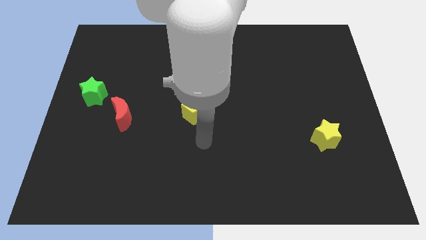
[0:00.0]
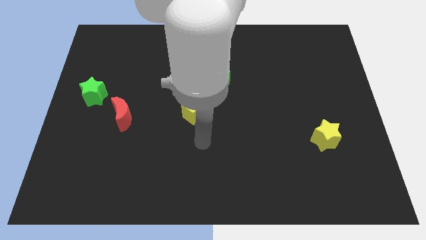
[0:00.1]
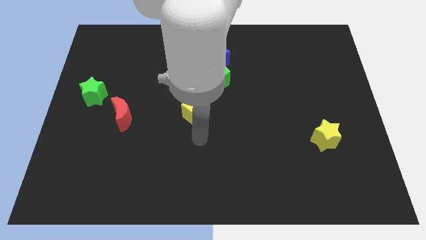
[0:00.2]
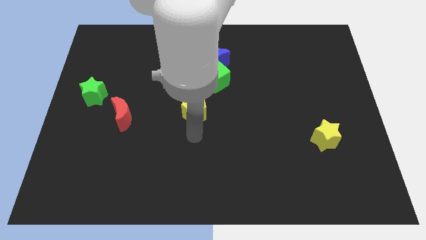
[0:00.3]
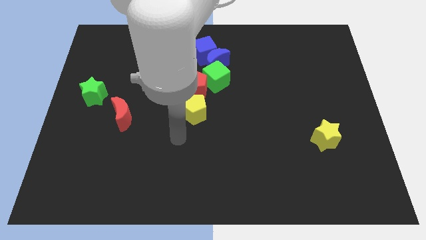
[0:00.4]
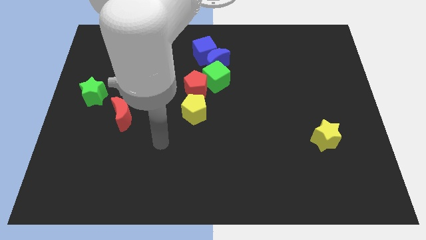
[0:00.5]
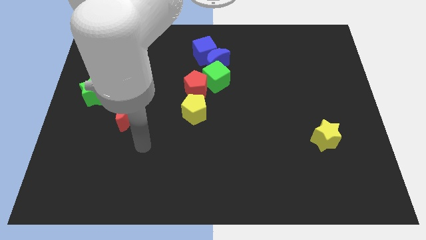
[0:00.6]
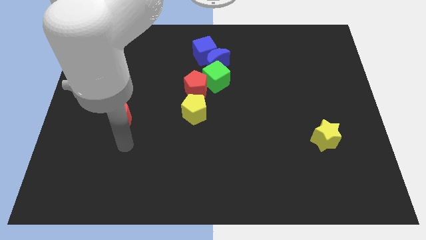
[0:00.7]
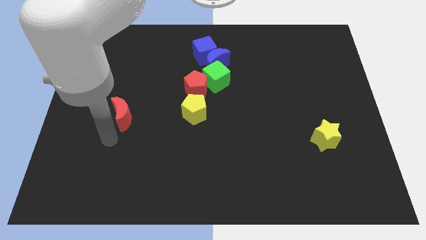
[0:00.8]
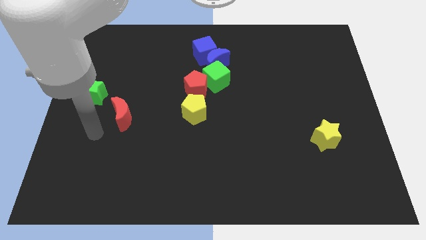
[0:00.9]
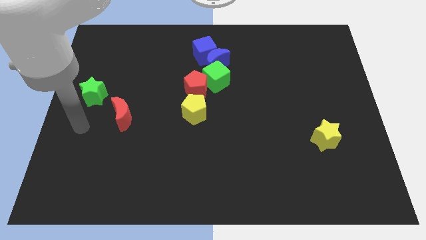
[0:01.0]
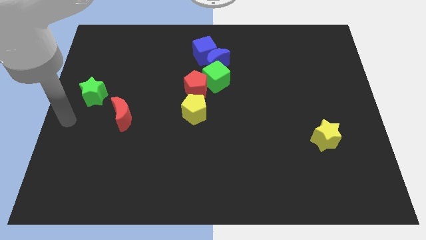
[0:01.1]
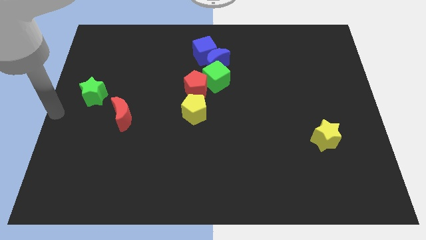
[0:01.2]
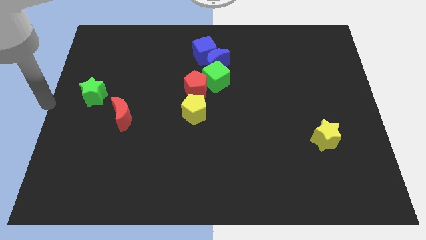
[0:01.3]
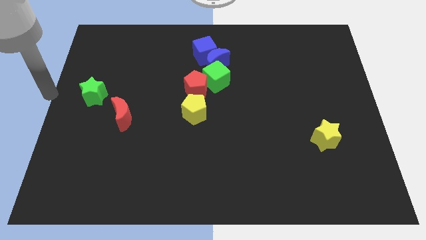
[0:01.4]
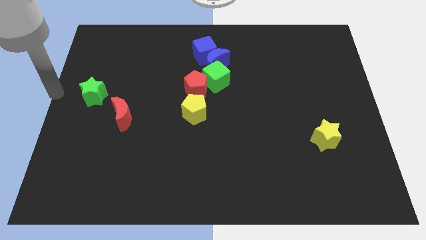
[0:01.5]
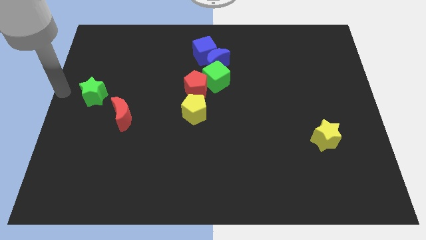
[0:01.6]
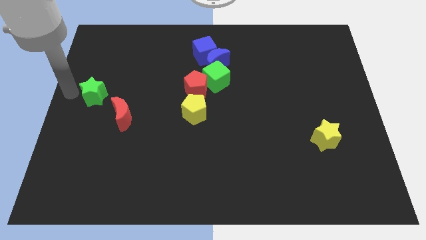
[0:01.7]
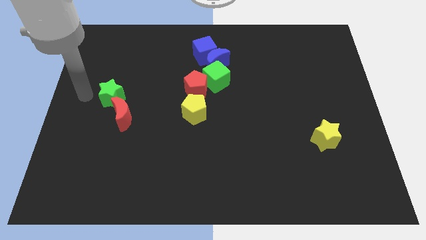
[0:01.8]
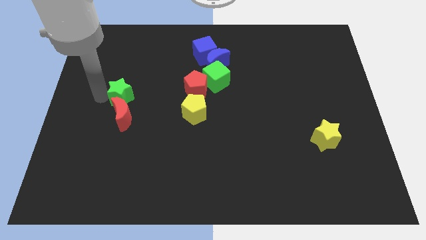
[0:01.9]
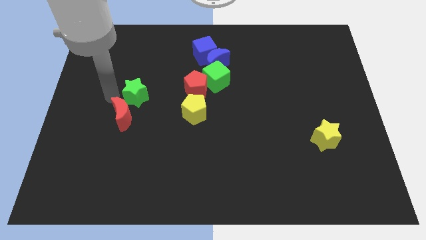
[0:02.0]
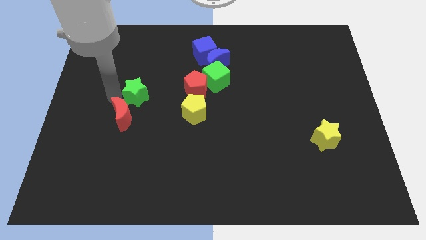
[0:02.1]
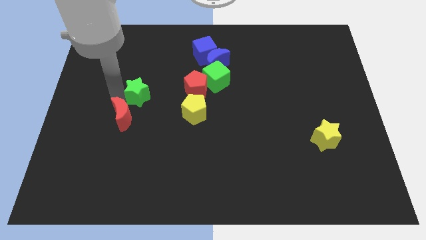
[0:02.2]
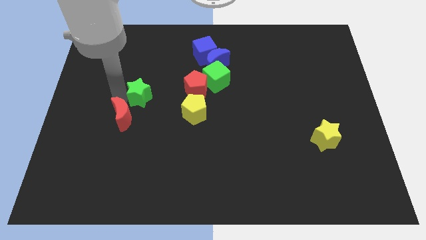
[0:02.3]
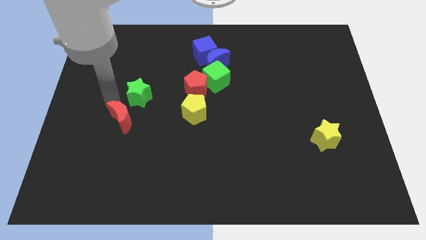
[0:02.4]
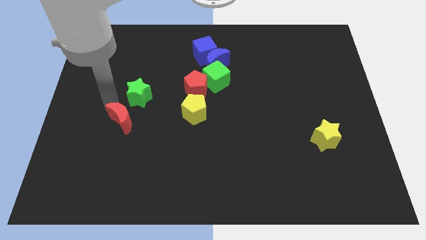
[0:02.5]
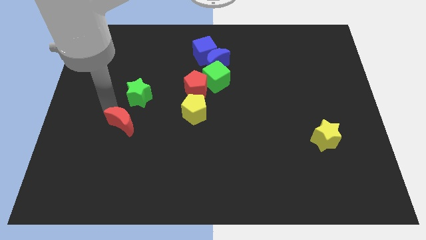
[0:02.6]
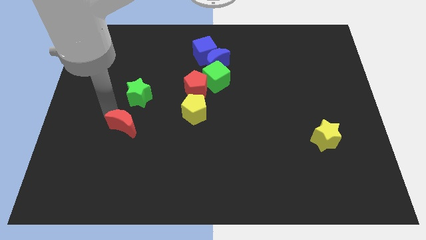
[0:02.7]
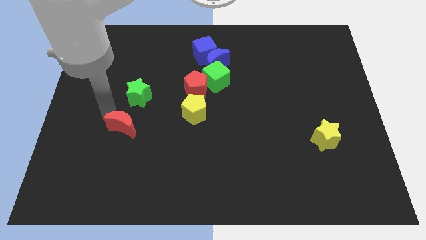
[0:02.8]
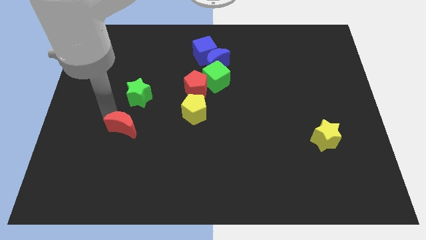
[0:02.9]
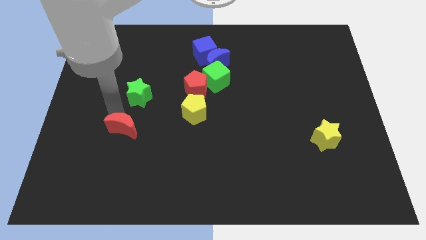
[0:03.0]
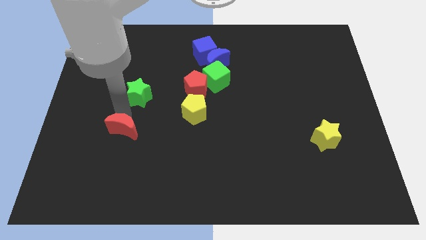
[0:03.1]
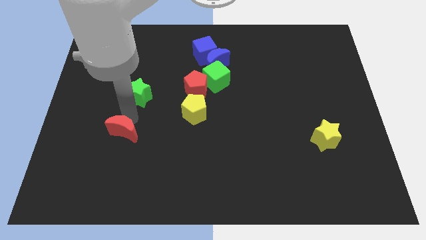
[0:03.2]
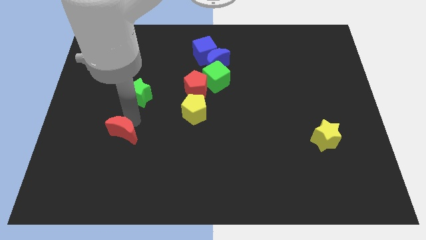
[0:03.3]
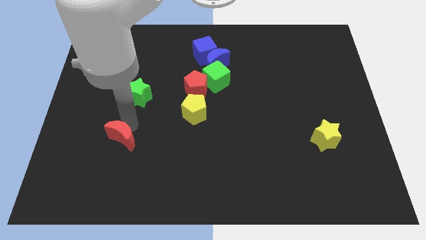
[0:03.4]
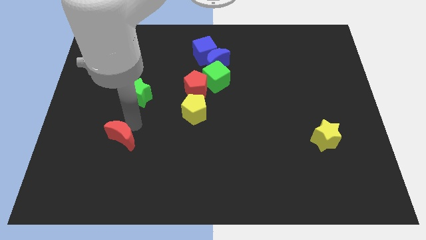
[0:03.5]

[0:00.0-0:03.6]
separate the green star and the red crescent

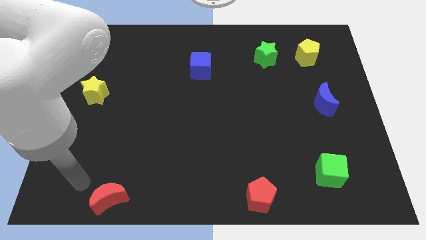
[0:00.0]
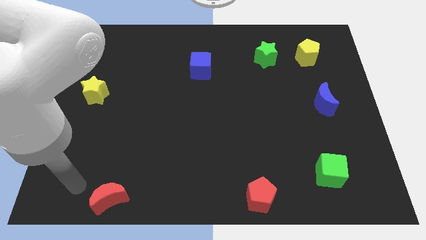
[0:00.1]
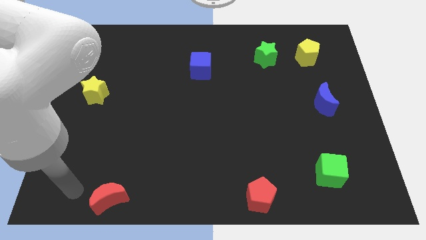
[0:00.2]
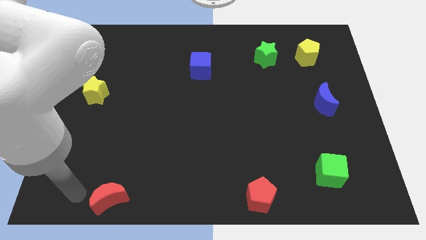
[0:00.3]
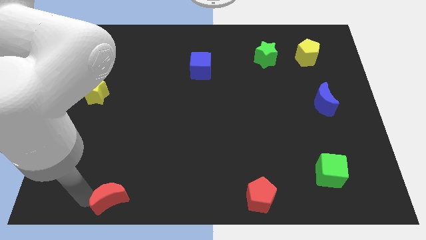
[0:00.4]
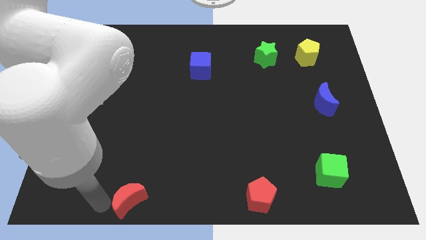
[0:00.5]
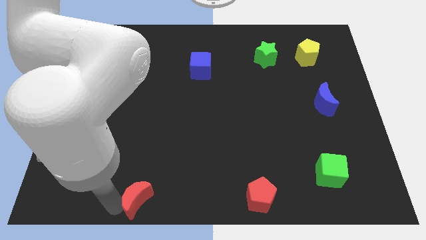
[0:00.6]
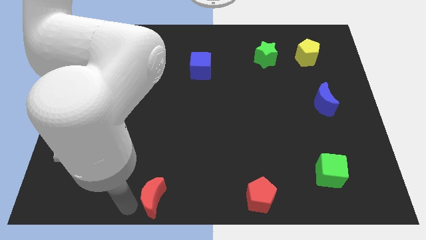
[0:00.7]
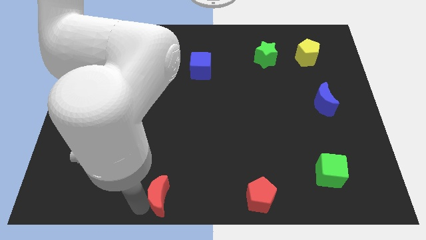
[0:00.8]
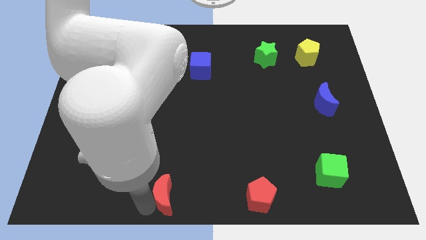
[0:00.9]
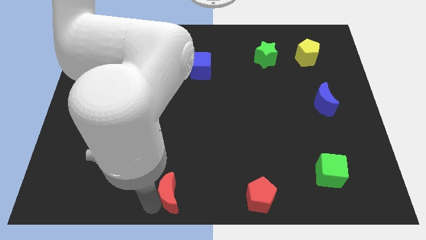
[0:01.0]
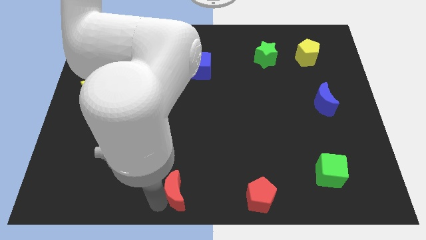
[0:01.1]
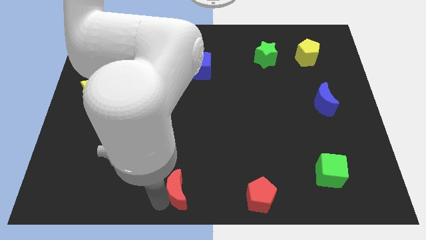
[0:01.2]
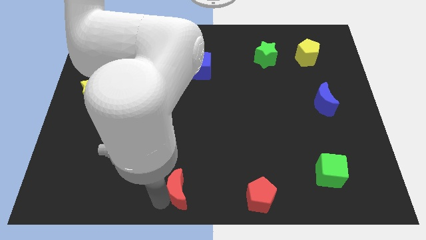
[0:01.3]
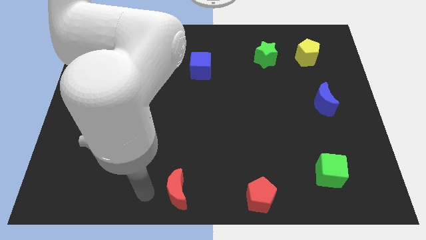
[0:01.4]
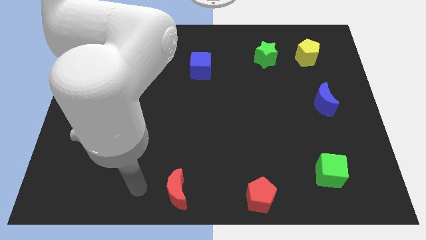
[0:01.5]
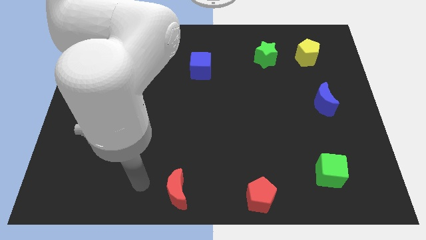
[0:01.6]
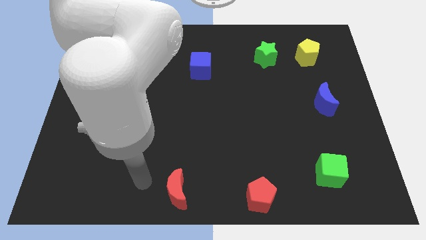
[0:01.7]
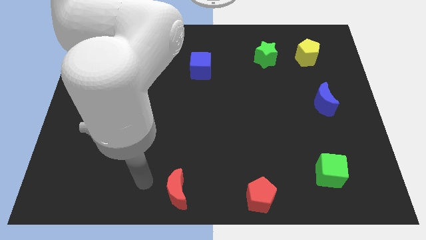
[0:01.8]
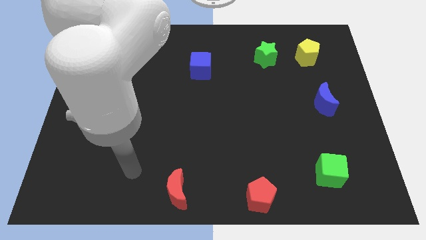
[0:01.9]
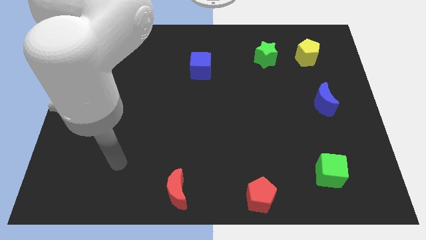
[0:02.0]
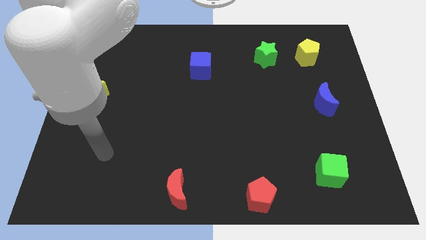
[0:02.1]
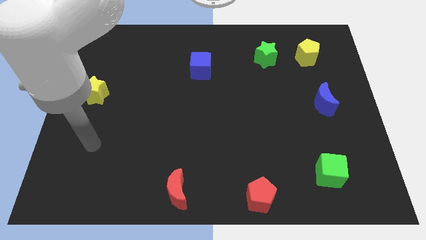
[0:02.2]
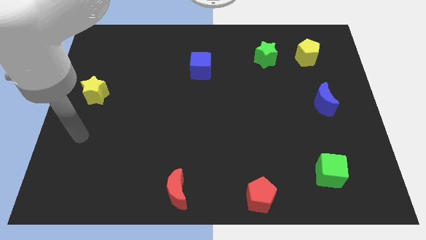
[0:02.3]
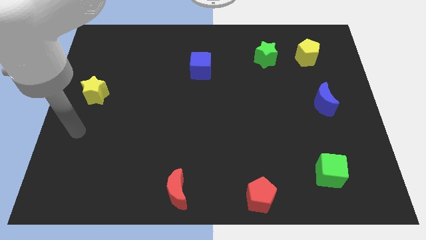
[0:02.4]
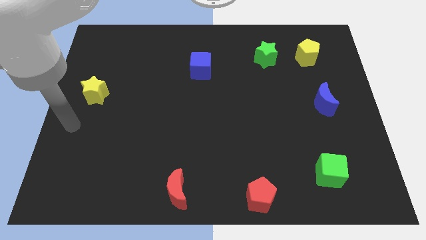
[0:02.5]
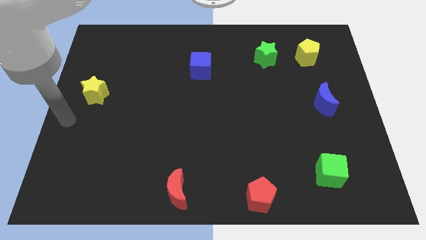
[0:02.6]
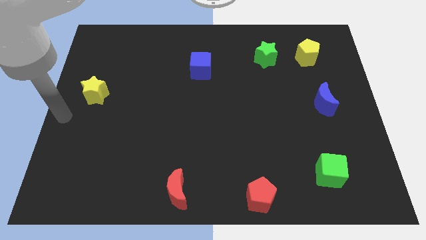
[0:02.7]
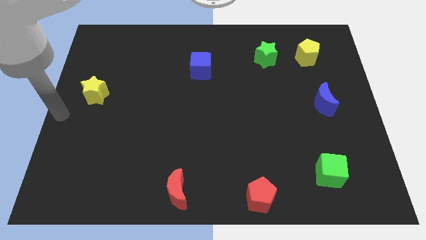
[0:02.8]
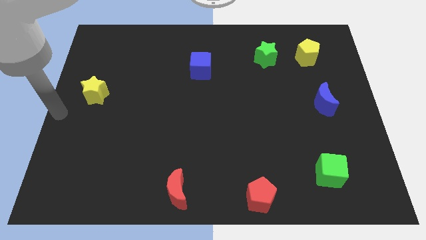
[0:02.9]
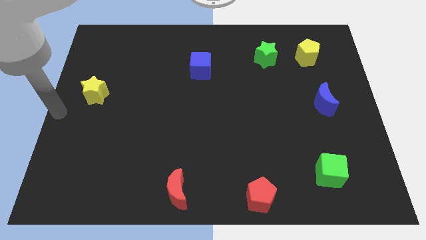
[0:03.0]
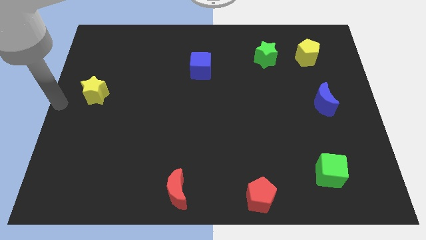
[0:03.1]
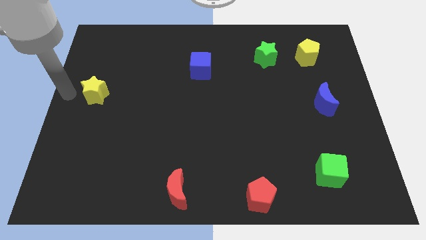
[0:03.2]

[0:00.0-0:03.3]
put the red moon at the bottom center

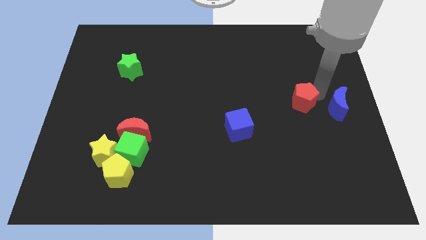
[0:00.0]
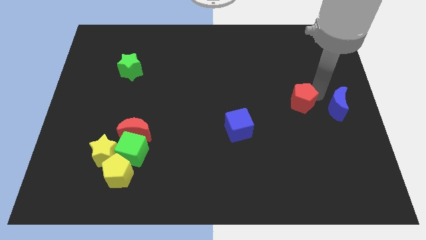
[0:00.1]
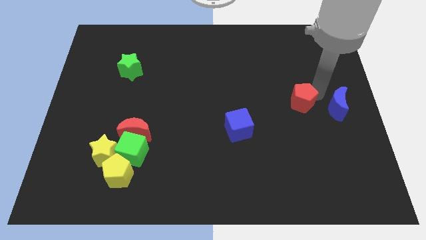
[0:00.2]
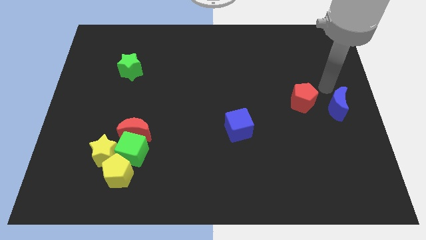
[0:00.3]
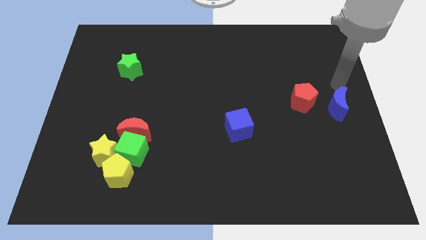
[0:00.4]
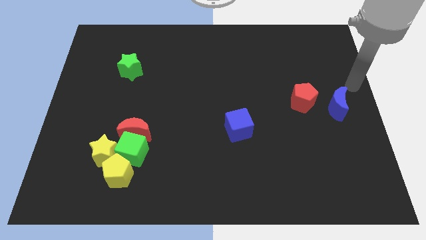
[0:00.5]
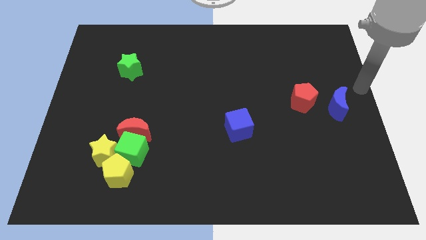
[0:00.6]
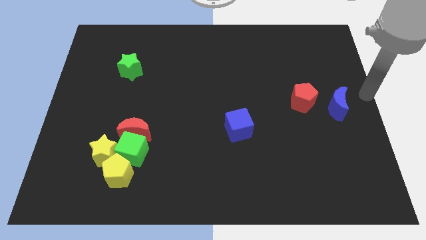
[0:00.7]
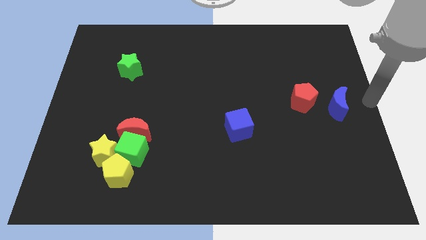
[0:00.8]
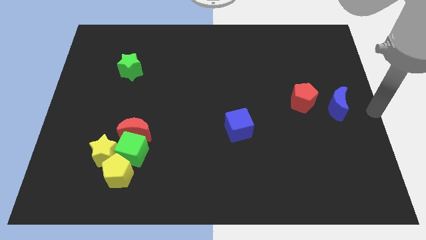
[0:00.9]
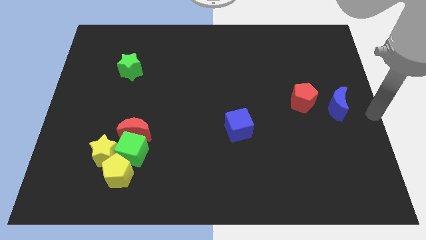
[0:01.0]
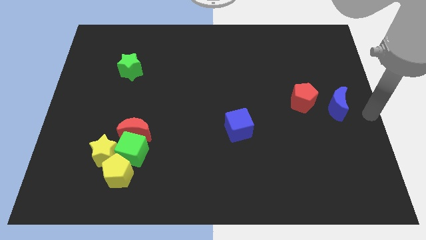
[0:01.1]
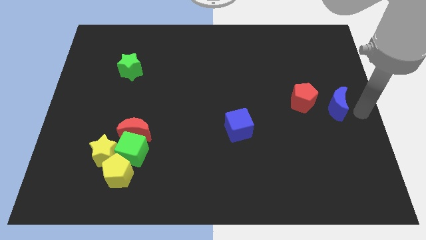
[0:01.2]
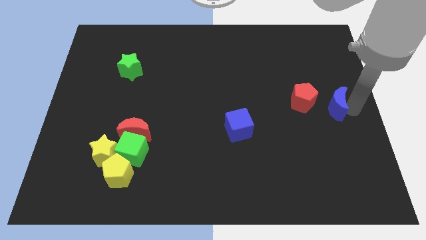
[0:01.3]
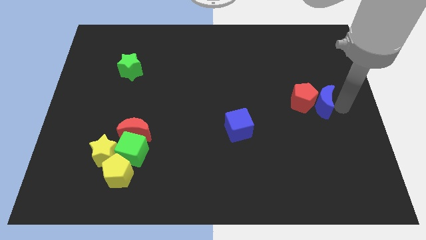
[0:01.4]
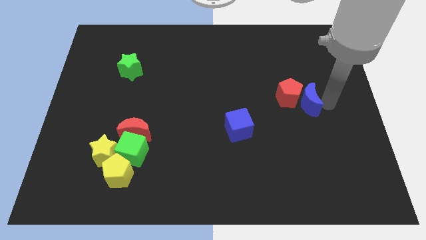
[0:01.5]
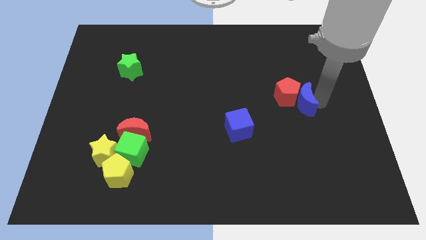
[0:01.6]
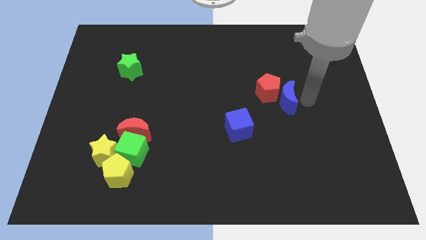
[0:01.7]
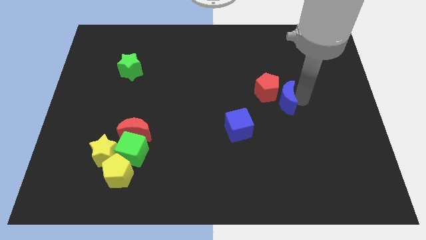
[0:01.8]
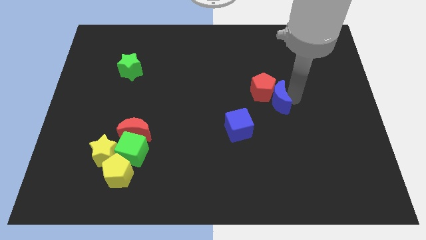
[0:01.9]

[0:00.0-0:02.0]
push the blue moon into the red pentagon

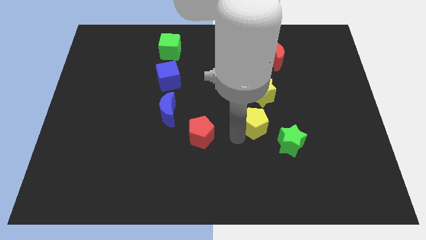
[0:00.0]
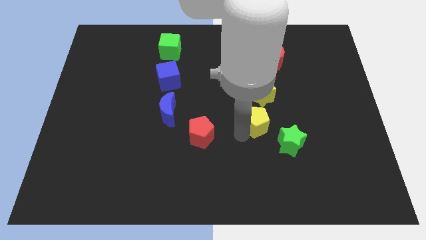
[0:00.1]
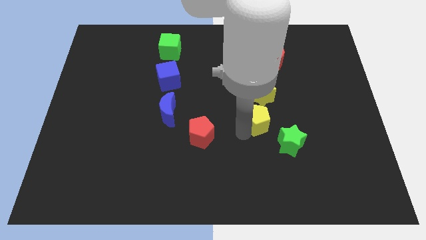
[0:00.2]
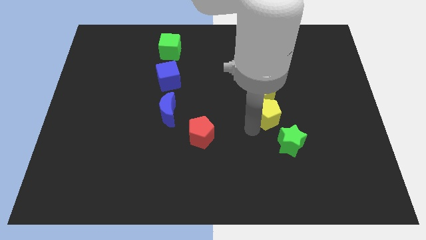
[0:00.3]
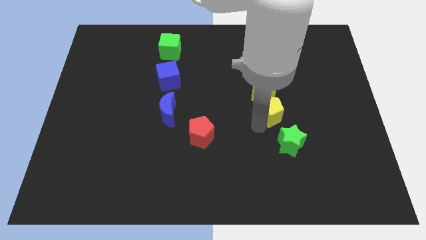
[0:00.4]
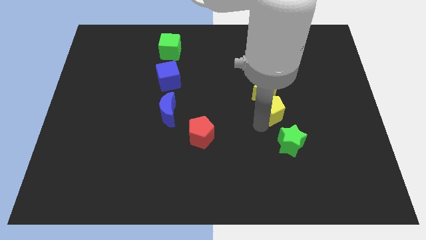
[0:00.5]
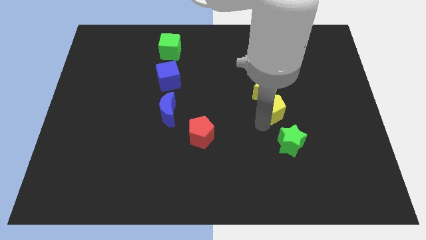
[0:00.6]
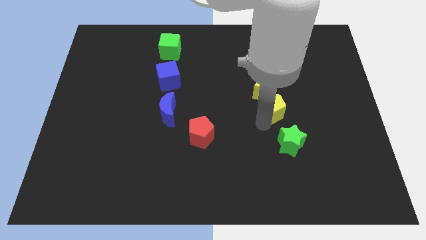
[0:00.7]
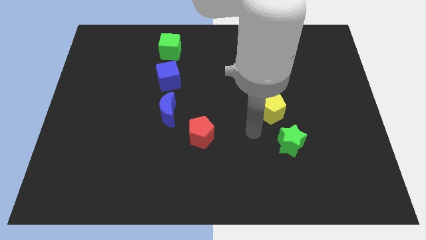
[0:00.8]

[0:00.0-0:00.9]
move the yellow pentagon below the yellow star
